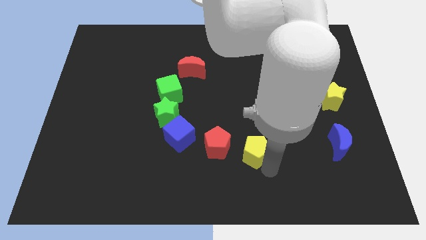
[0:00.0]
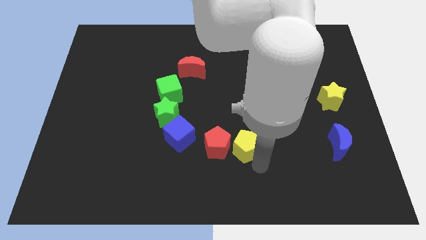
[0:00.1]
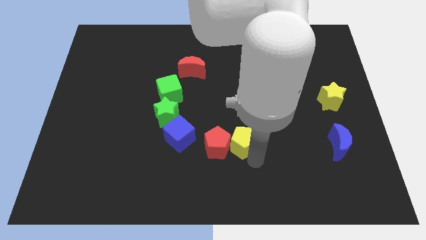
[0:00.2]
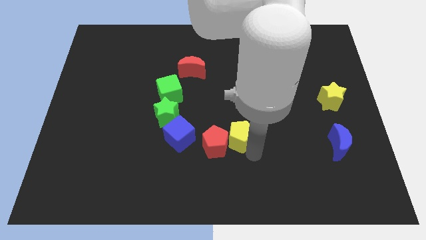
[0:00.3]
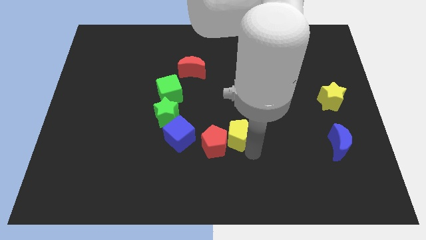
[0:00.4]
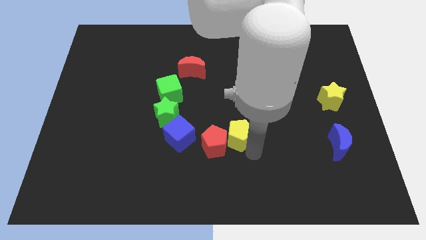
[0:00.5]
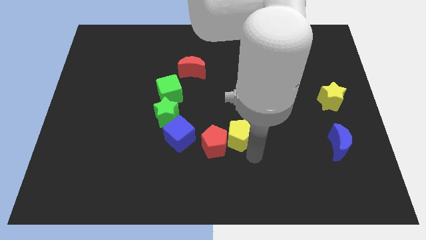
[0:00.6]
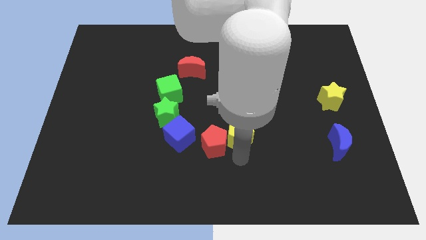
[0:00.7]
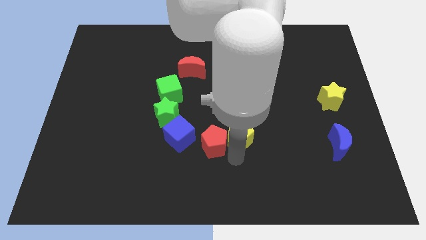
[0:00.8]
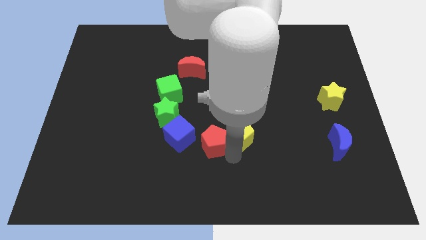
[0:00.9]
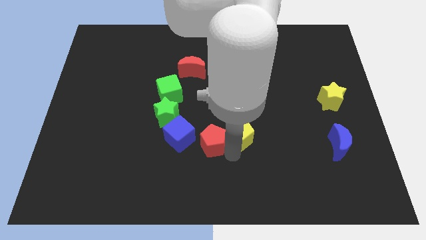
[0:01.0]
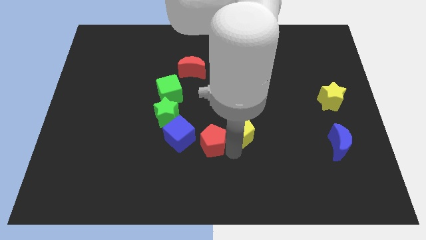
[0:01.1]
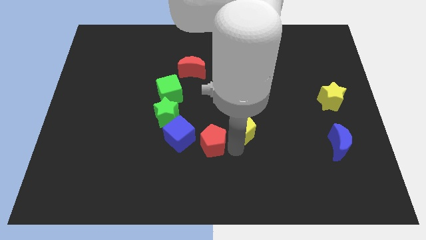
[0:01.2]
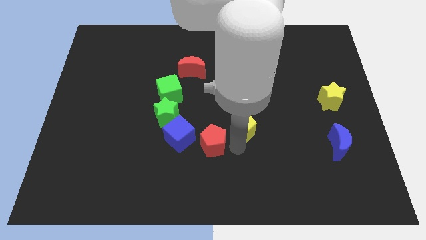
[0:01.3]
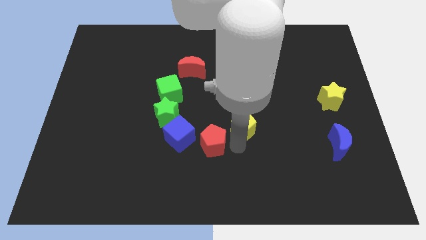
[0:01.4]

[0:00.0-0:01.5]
push the yellow pentagon diagonally top right to the red pentagon

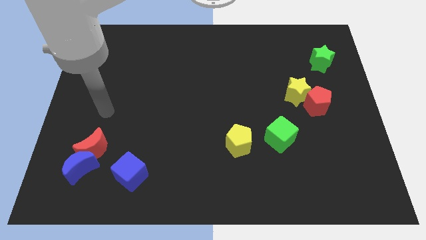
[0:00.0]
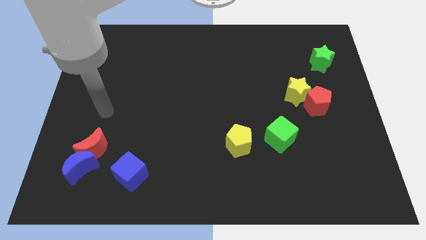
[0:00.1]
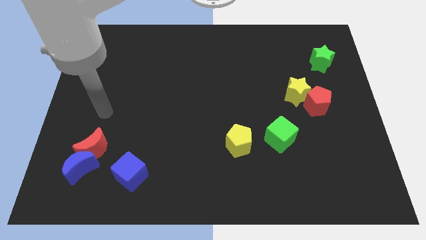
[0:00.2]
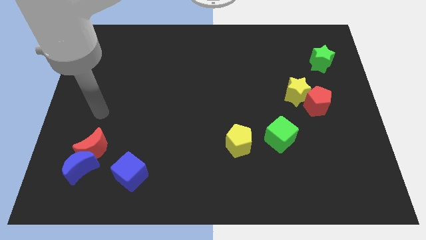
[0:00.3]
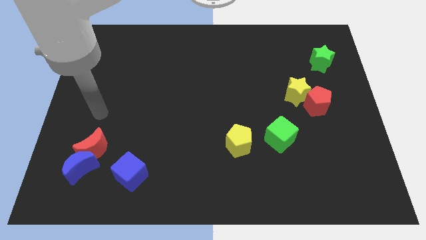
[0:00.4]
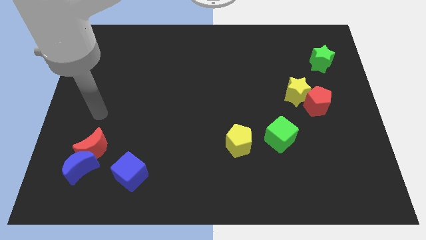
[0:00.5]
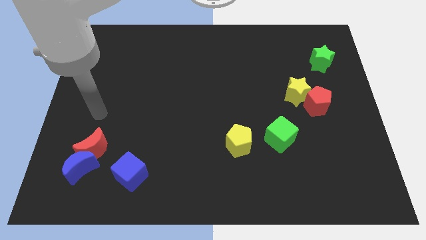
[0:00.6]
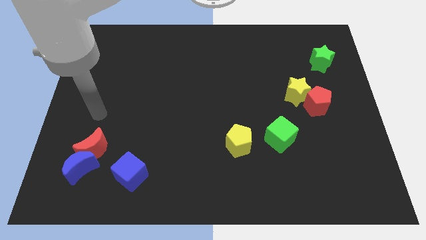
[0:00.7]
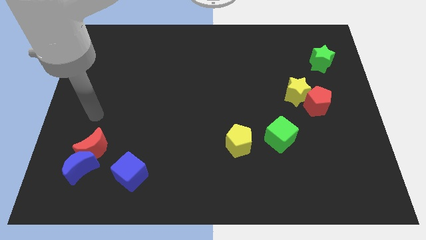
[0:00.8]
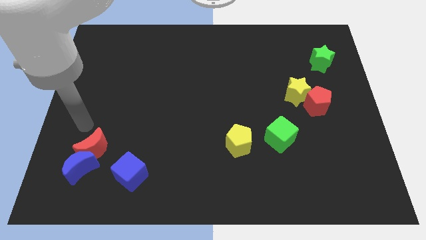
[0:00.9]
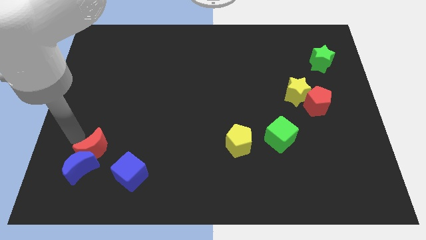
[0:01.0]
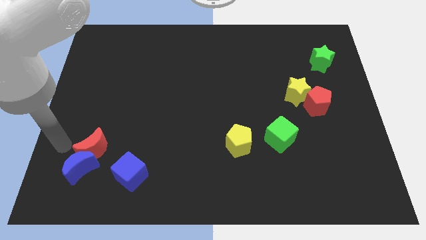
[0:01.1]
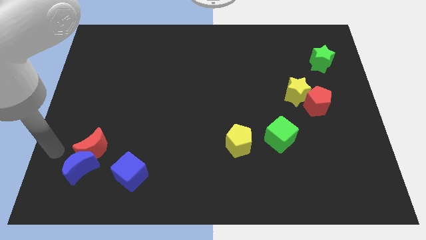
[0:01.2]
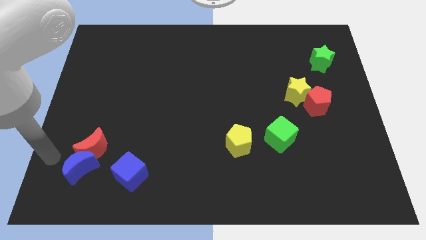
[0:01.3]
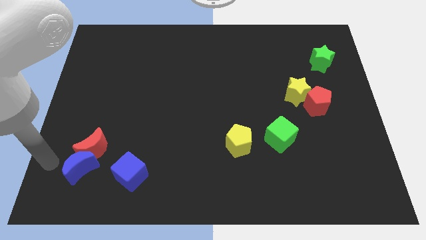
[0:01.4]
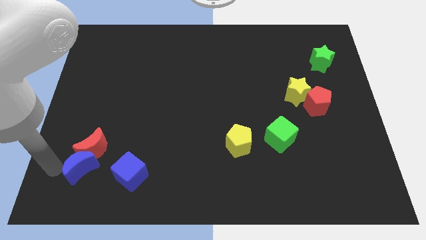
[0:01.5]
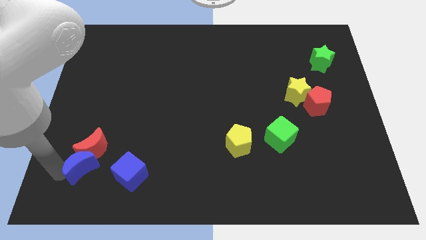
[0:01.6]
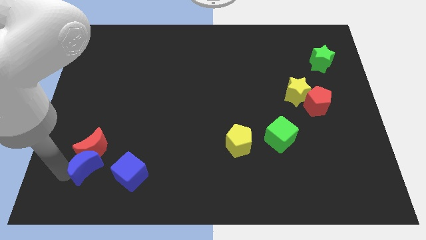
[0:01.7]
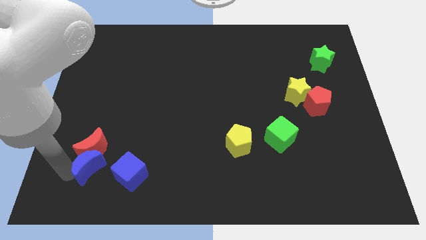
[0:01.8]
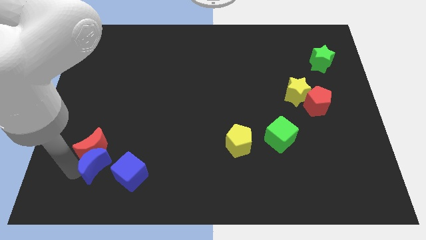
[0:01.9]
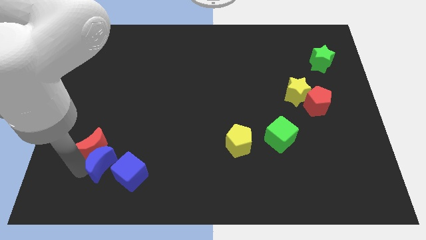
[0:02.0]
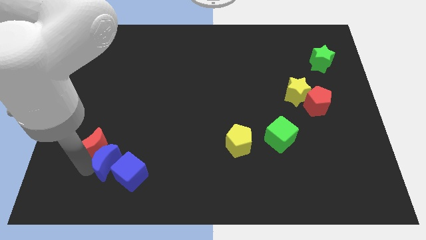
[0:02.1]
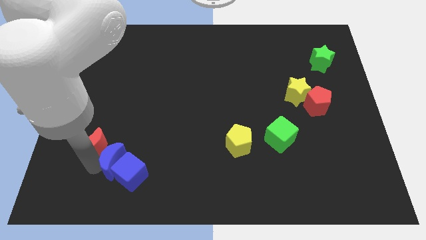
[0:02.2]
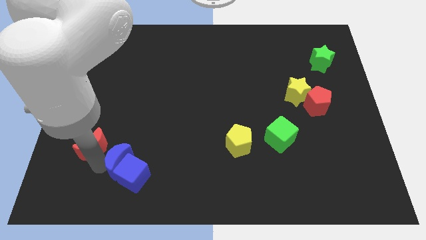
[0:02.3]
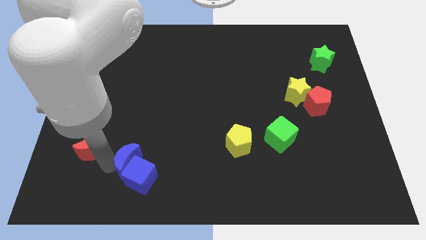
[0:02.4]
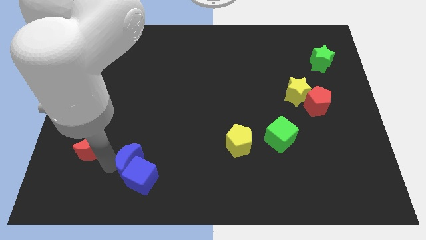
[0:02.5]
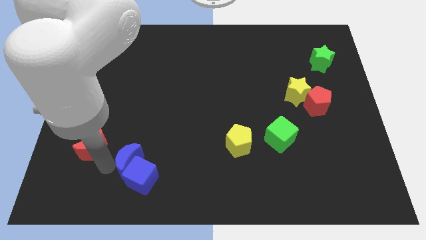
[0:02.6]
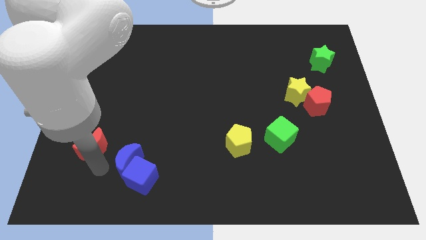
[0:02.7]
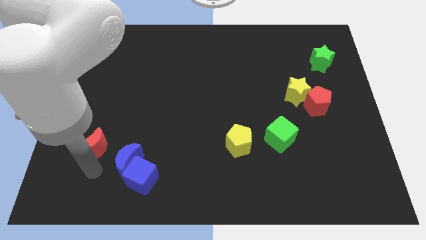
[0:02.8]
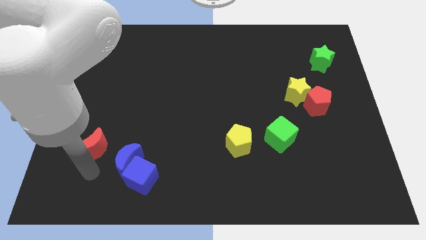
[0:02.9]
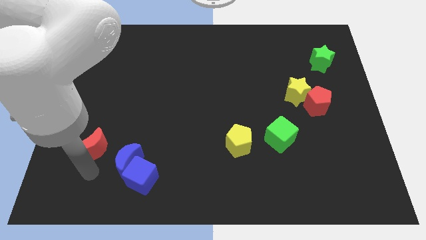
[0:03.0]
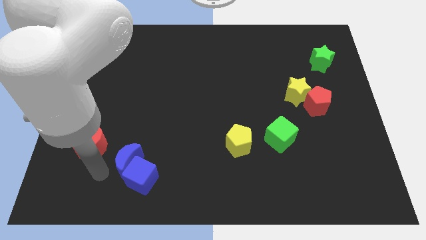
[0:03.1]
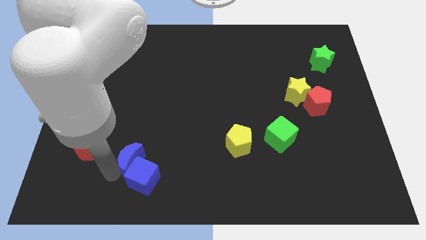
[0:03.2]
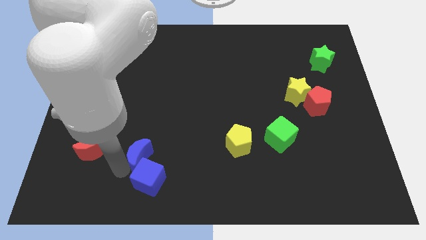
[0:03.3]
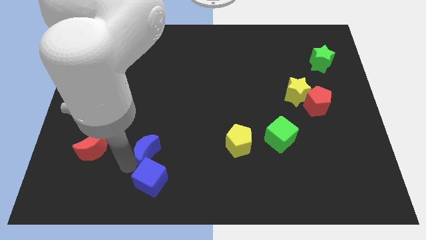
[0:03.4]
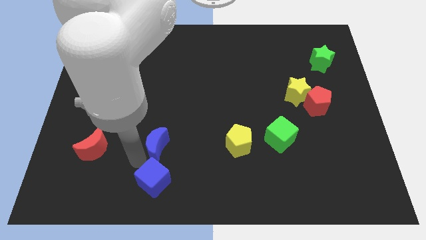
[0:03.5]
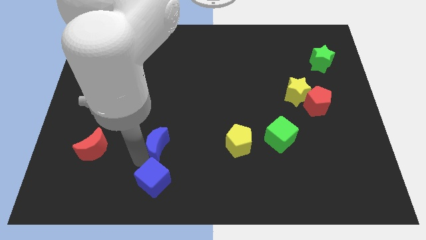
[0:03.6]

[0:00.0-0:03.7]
push the blue crescent to the top of the blue cube

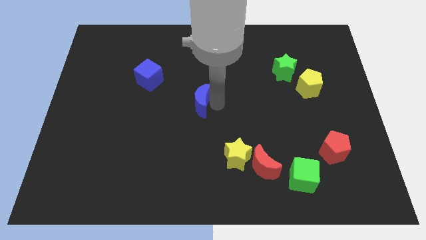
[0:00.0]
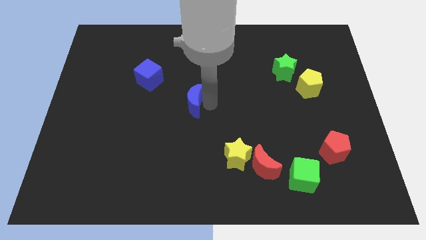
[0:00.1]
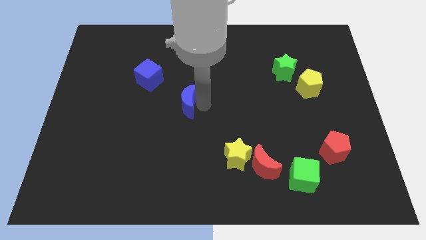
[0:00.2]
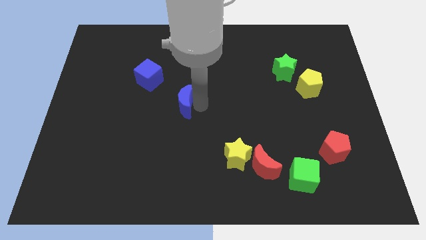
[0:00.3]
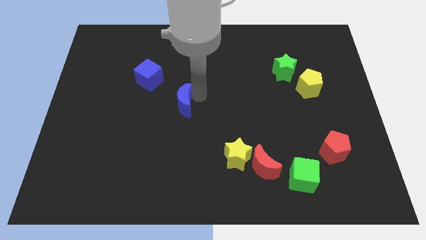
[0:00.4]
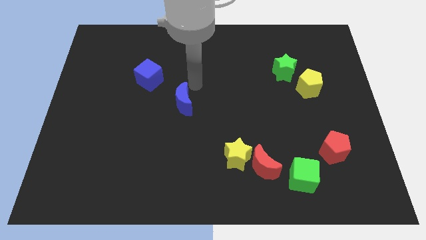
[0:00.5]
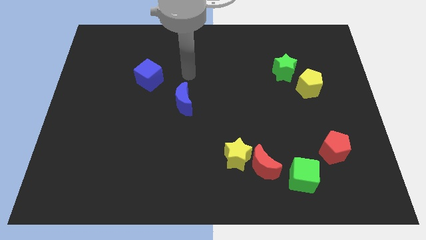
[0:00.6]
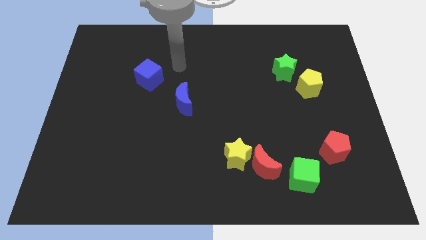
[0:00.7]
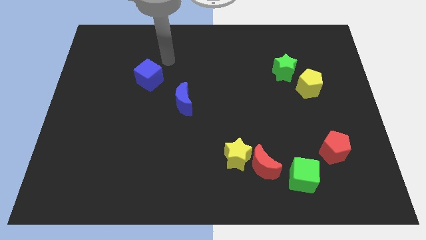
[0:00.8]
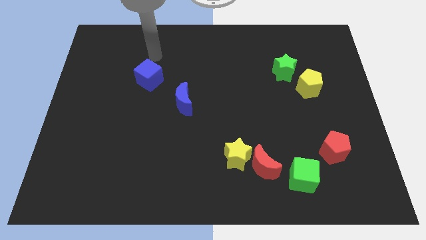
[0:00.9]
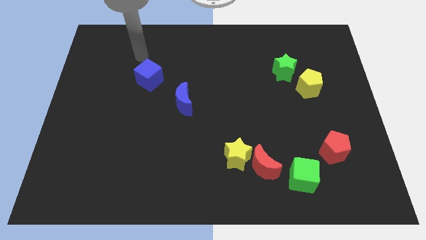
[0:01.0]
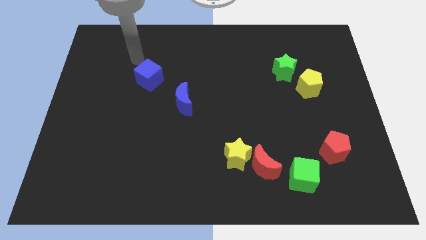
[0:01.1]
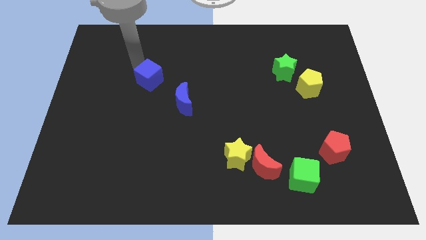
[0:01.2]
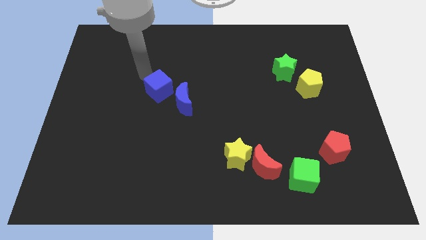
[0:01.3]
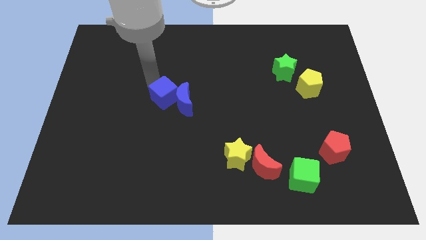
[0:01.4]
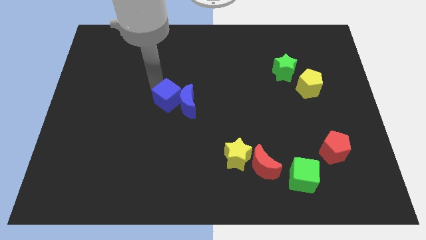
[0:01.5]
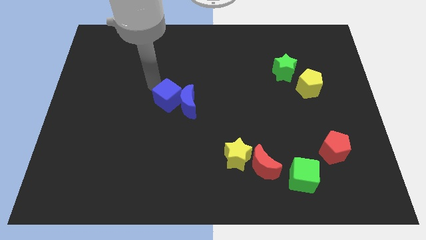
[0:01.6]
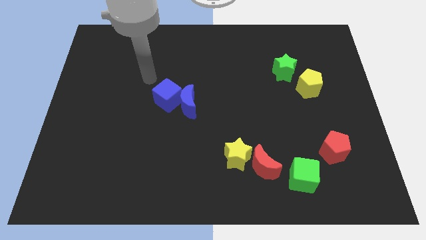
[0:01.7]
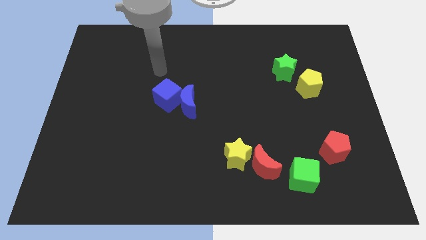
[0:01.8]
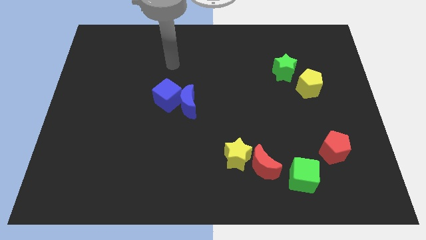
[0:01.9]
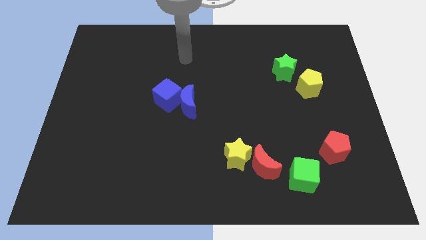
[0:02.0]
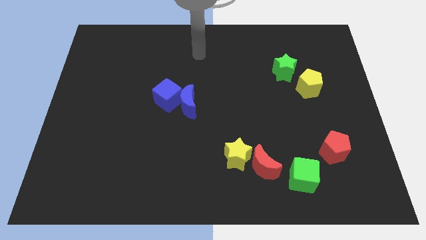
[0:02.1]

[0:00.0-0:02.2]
push the blue moon with the blue cube

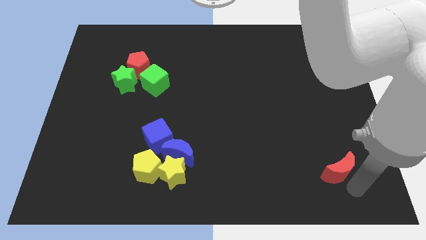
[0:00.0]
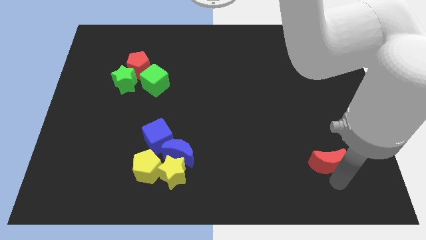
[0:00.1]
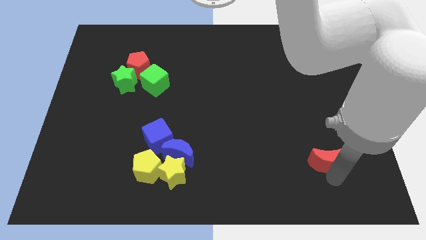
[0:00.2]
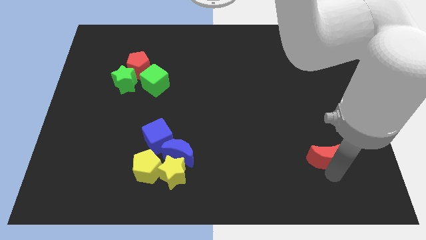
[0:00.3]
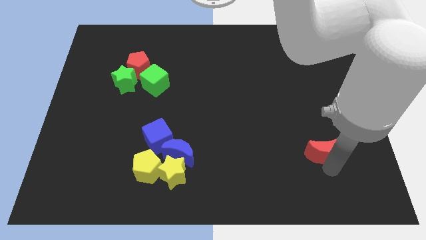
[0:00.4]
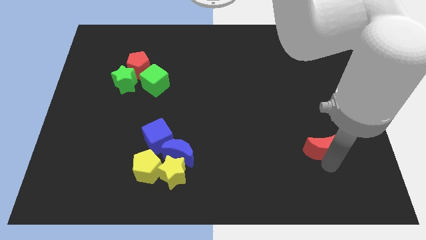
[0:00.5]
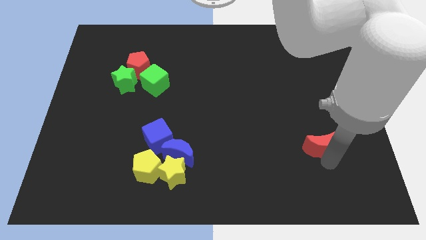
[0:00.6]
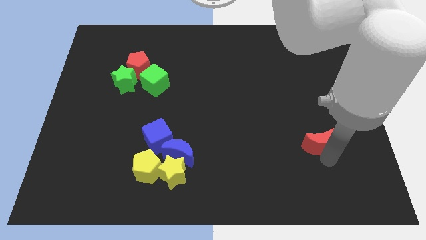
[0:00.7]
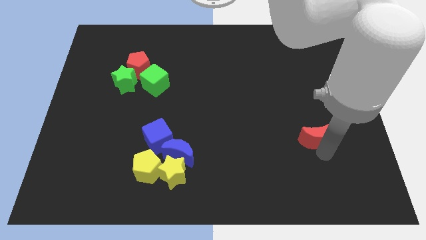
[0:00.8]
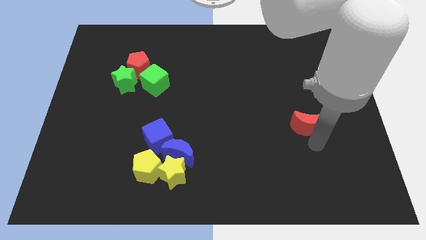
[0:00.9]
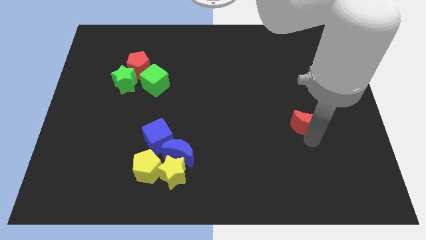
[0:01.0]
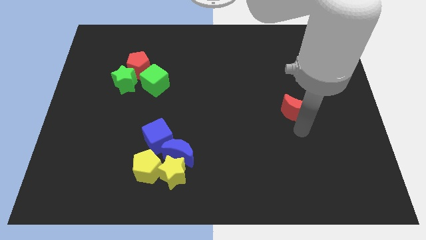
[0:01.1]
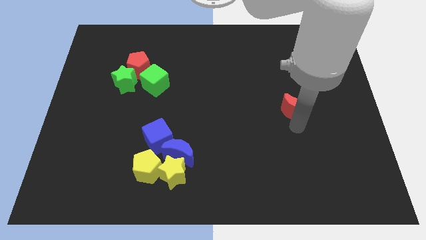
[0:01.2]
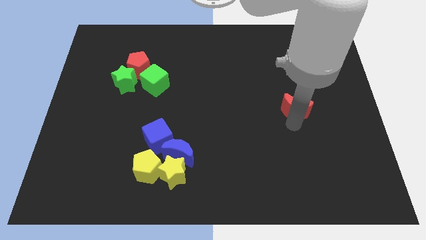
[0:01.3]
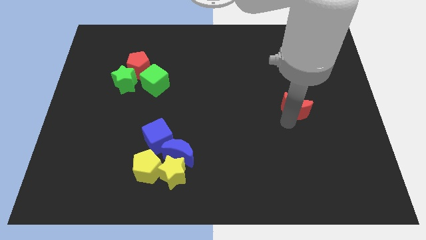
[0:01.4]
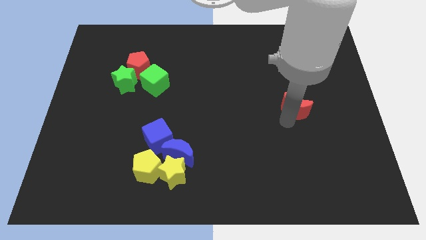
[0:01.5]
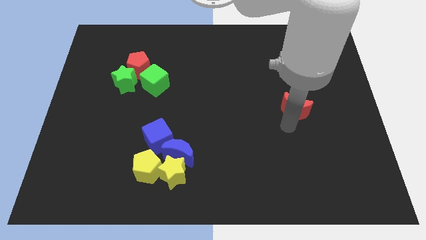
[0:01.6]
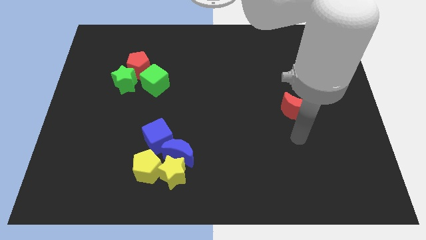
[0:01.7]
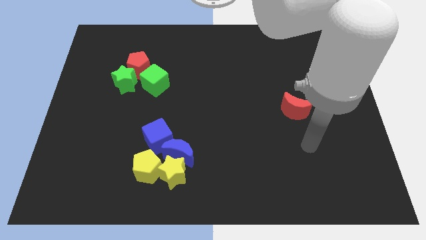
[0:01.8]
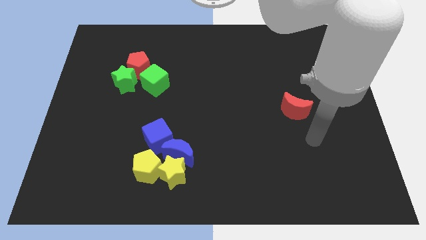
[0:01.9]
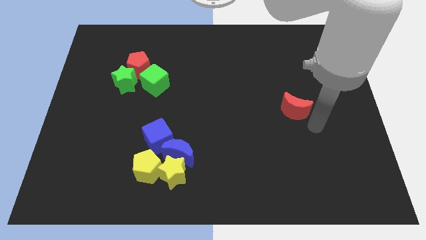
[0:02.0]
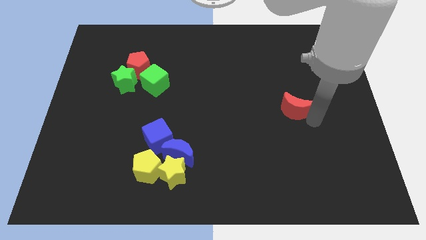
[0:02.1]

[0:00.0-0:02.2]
slide the red moon towards up
